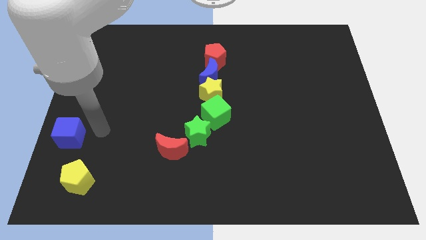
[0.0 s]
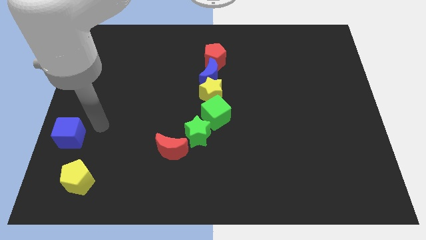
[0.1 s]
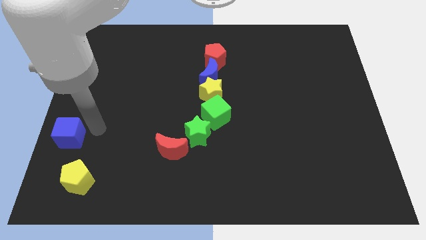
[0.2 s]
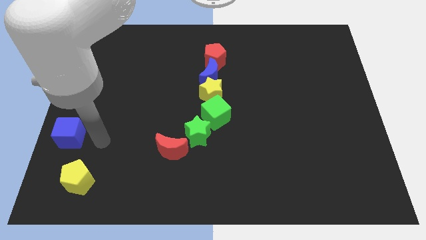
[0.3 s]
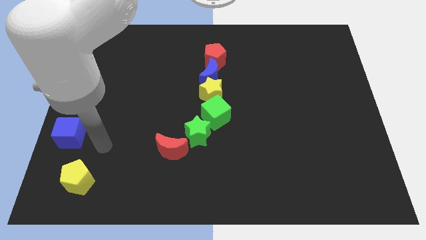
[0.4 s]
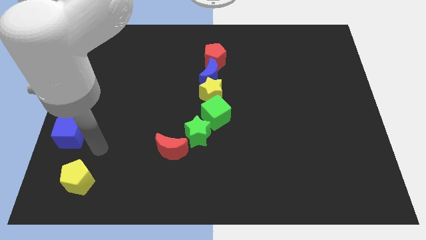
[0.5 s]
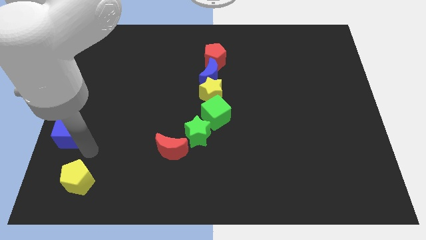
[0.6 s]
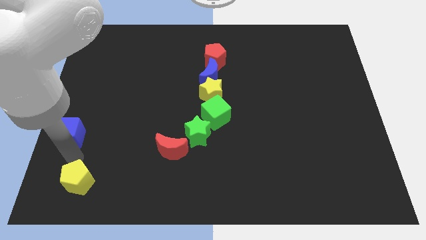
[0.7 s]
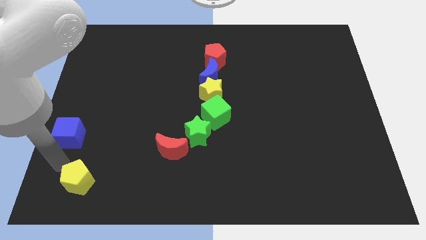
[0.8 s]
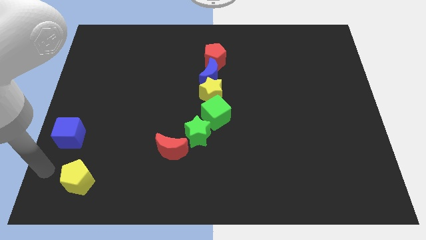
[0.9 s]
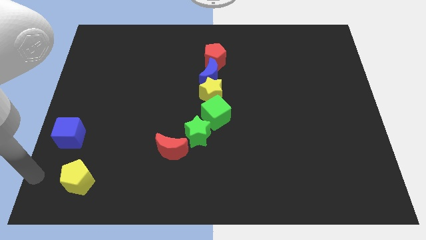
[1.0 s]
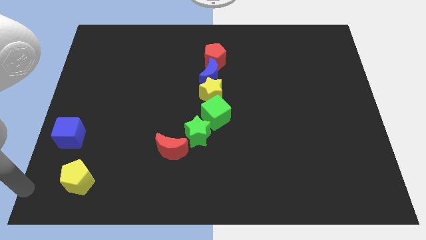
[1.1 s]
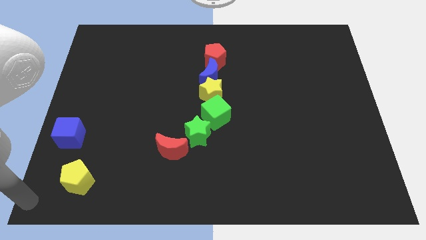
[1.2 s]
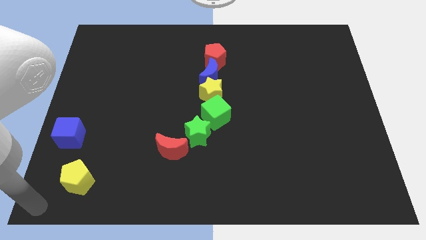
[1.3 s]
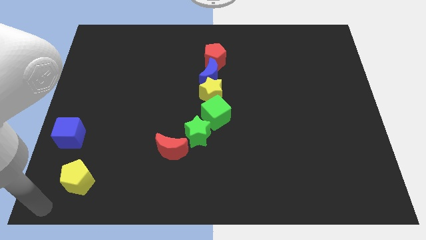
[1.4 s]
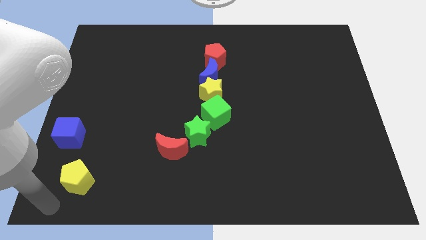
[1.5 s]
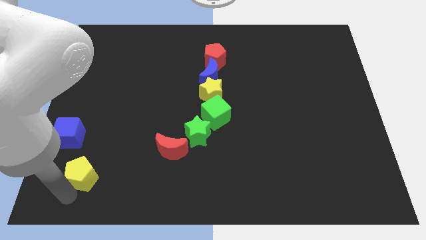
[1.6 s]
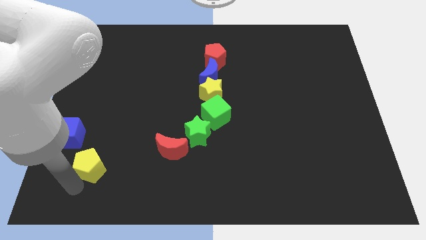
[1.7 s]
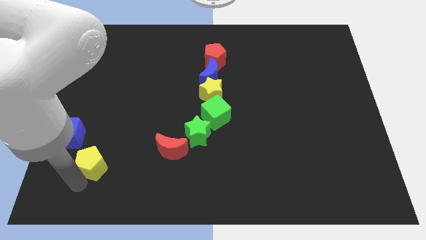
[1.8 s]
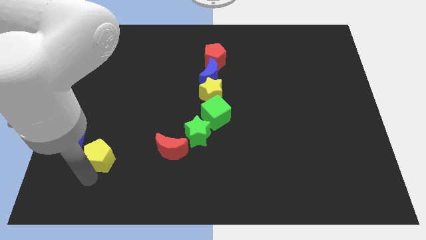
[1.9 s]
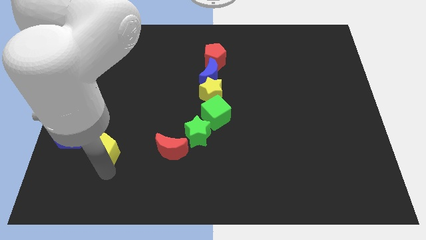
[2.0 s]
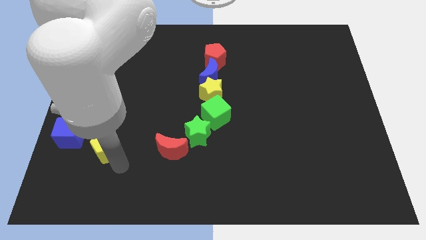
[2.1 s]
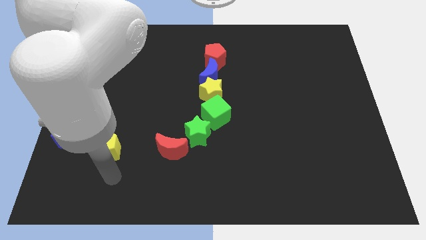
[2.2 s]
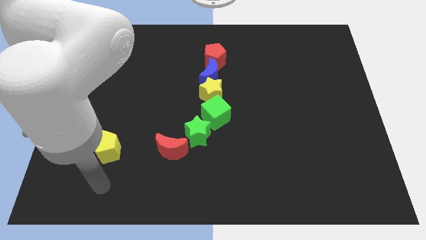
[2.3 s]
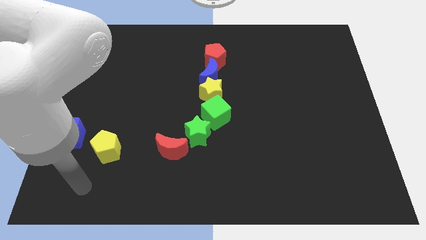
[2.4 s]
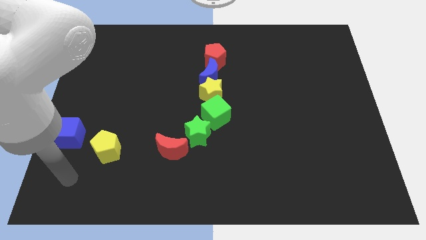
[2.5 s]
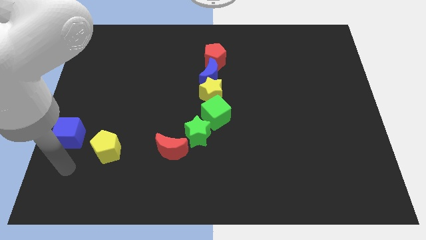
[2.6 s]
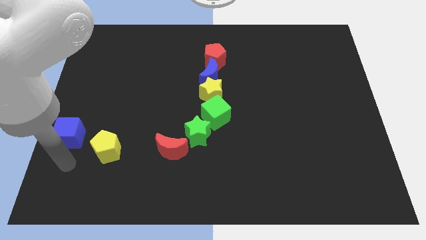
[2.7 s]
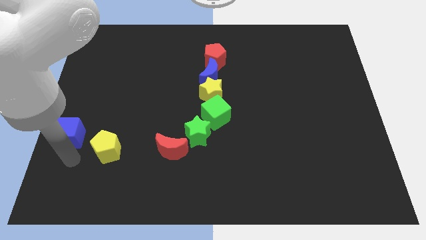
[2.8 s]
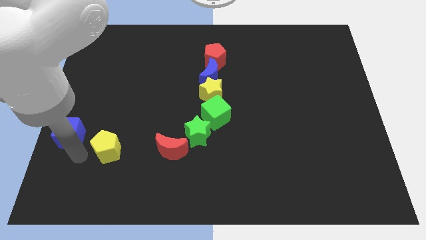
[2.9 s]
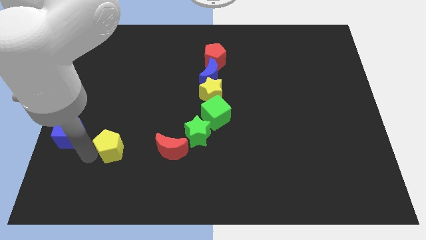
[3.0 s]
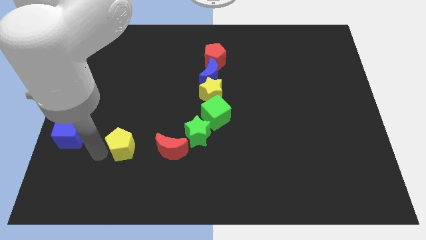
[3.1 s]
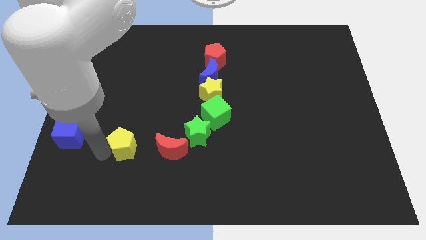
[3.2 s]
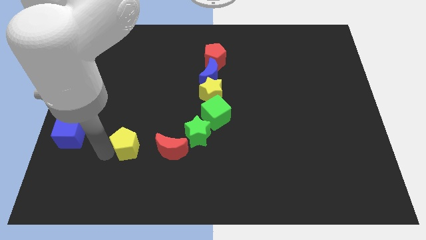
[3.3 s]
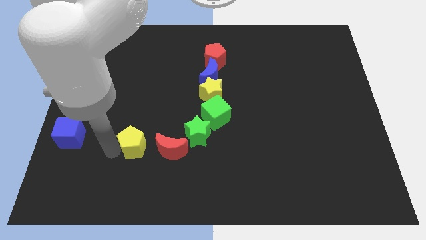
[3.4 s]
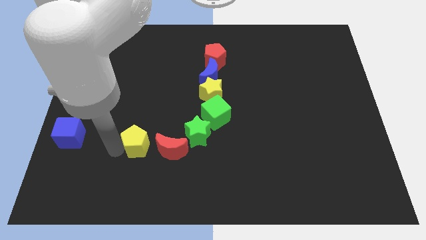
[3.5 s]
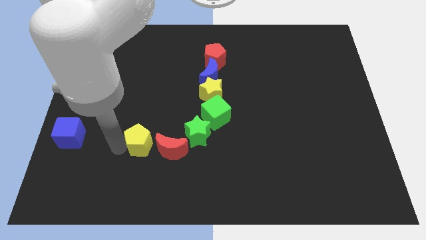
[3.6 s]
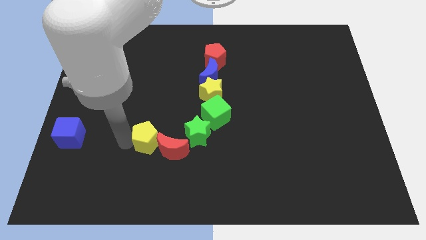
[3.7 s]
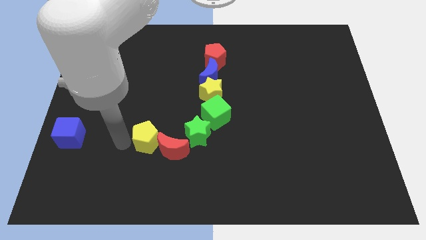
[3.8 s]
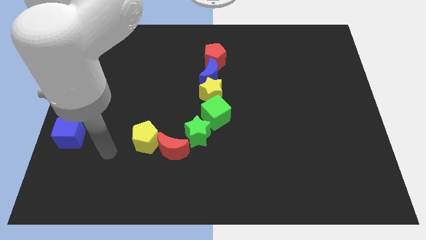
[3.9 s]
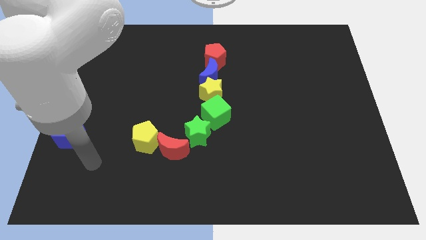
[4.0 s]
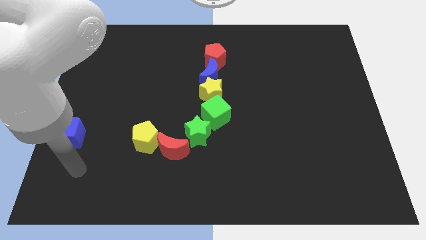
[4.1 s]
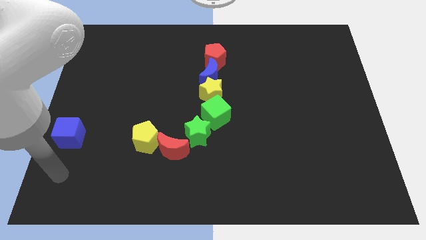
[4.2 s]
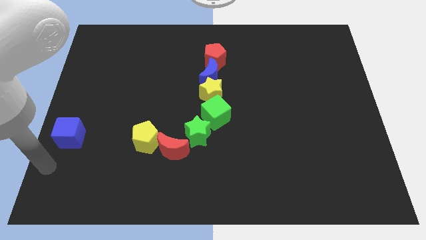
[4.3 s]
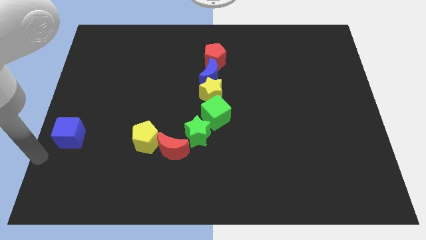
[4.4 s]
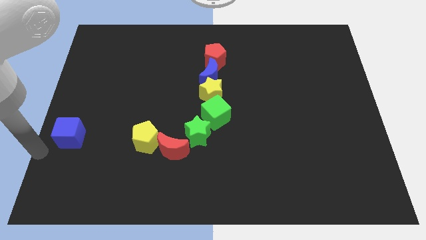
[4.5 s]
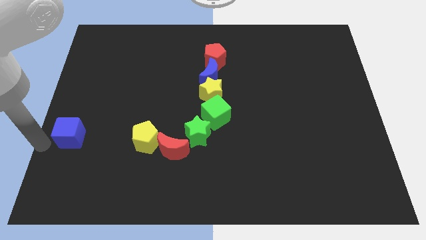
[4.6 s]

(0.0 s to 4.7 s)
move yellow pentagon close to red moon

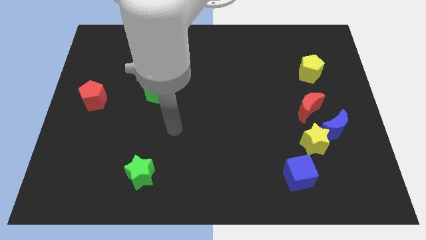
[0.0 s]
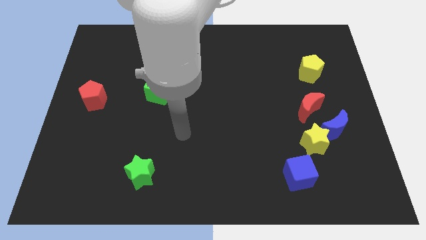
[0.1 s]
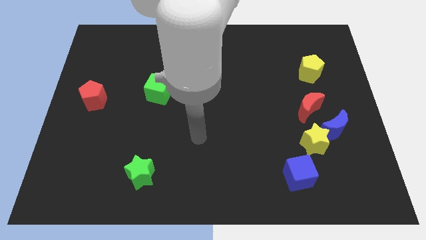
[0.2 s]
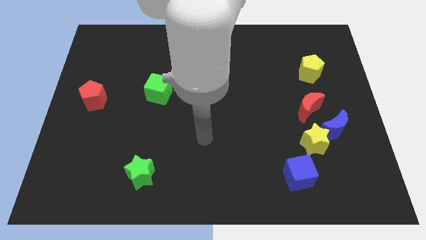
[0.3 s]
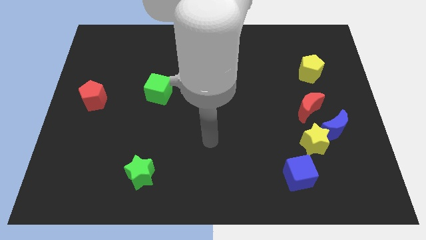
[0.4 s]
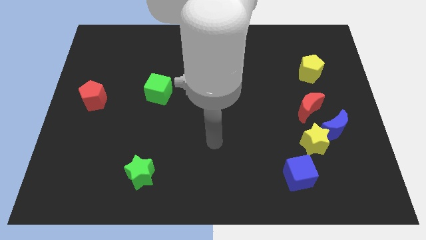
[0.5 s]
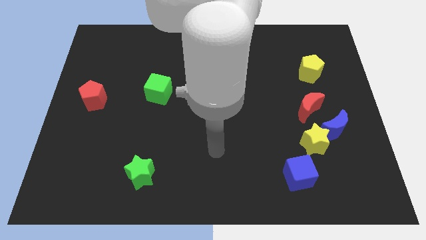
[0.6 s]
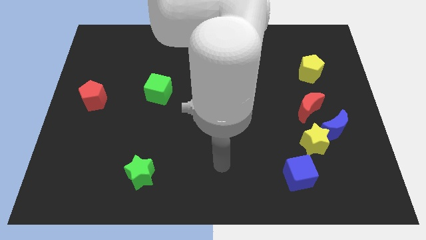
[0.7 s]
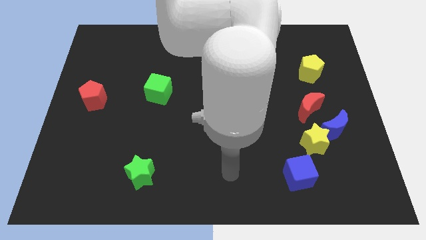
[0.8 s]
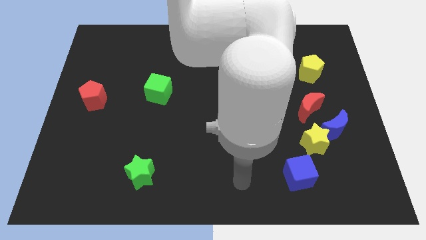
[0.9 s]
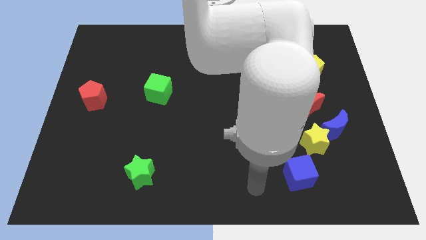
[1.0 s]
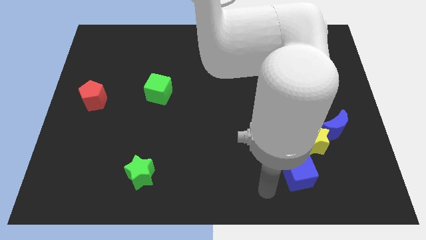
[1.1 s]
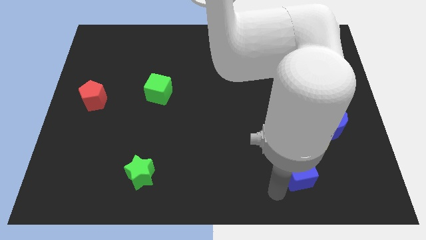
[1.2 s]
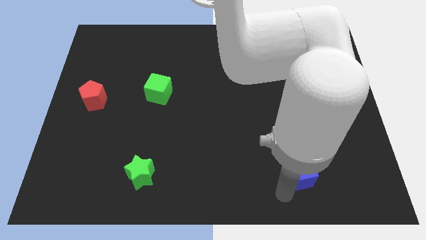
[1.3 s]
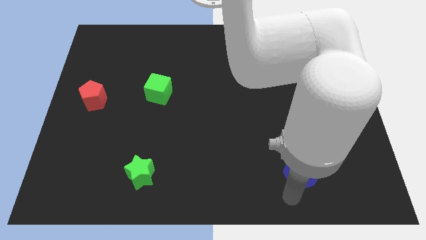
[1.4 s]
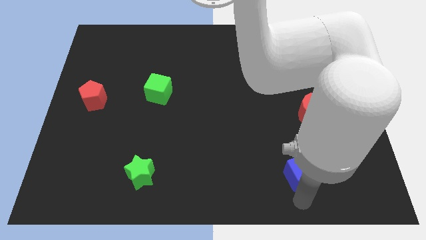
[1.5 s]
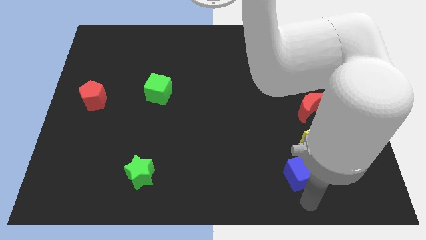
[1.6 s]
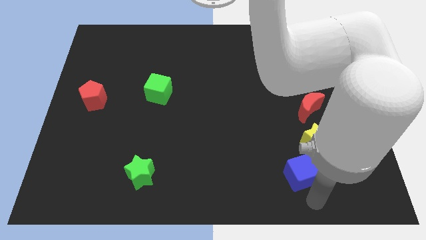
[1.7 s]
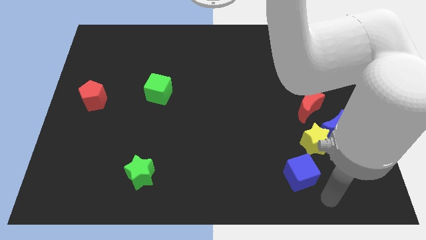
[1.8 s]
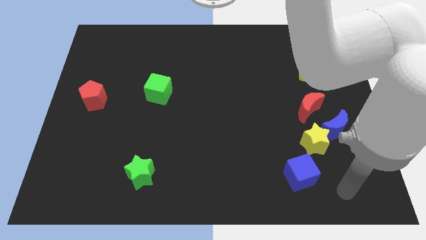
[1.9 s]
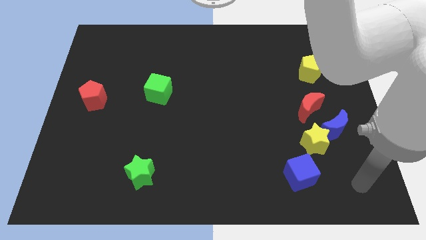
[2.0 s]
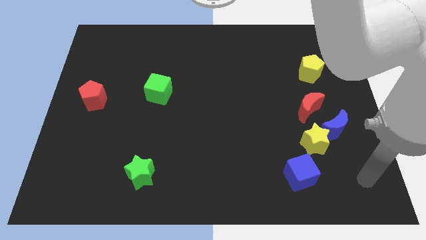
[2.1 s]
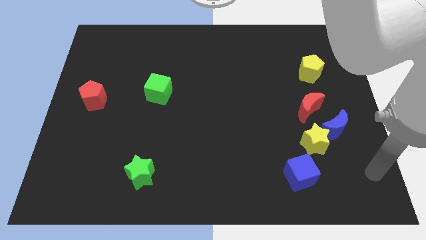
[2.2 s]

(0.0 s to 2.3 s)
go and place your arm at the right of the blue cube

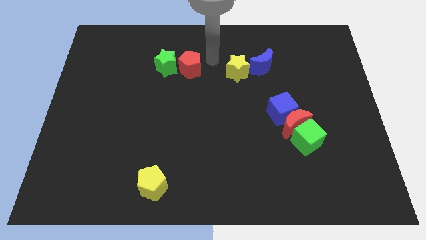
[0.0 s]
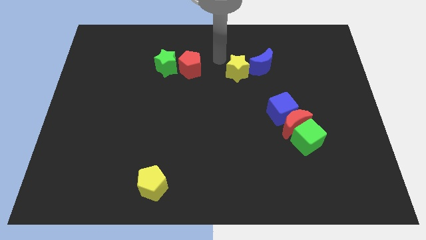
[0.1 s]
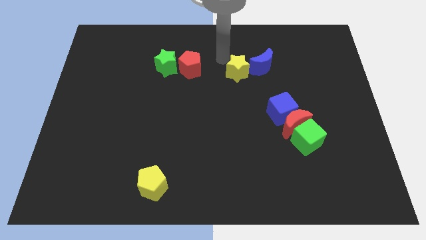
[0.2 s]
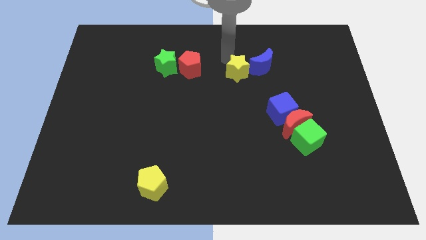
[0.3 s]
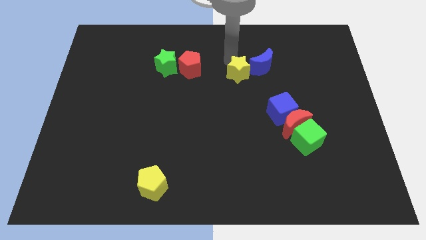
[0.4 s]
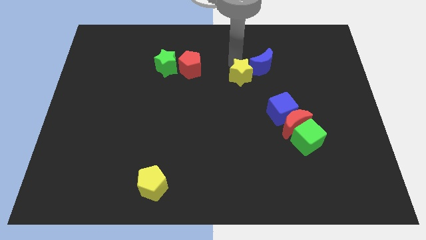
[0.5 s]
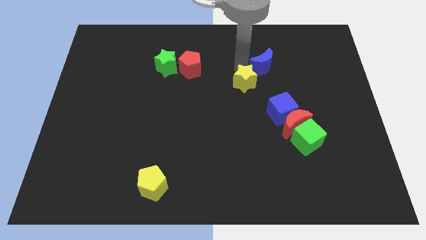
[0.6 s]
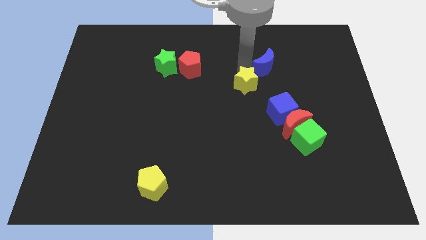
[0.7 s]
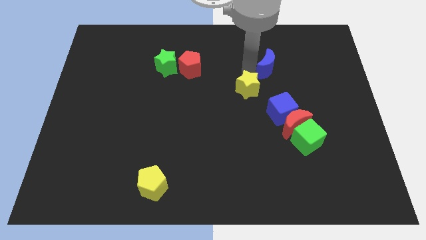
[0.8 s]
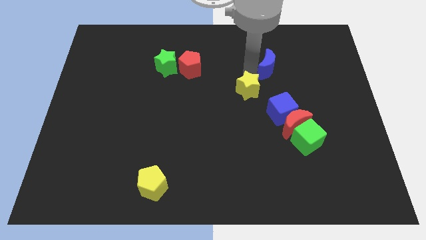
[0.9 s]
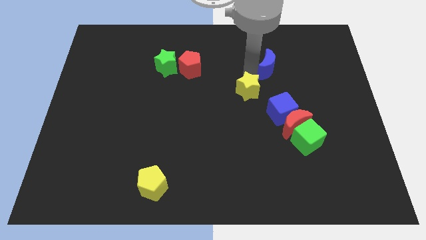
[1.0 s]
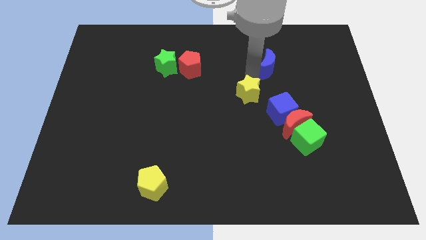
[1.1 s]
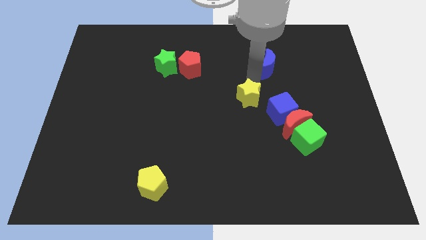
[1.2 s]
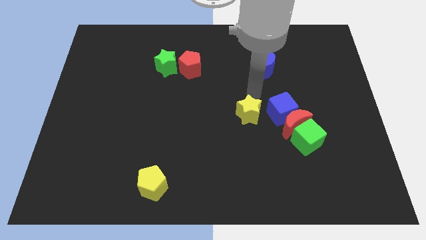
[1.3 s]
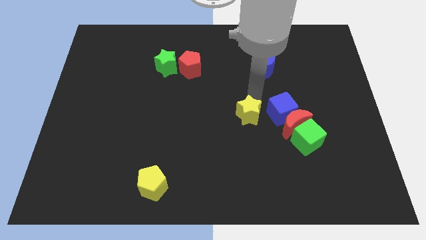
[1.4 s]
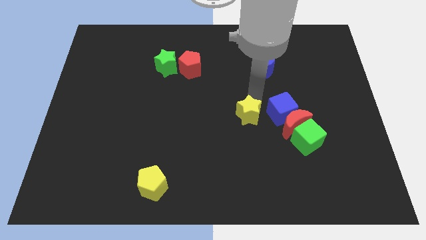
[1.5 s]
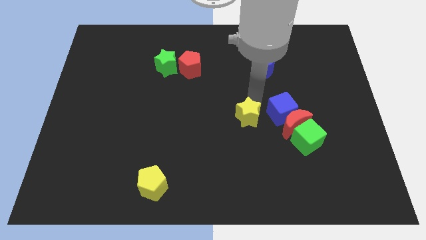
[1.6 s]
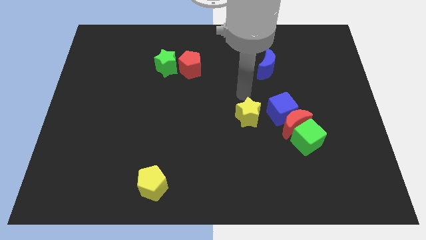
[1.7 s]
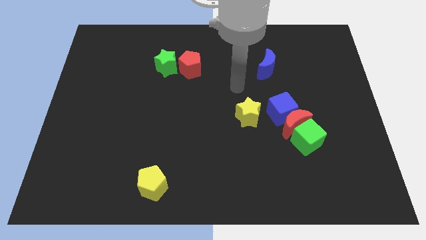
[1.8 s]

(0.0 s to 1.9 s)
push the yellow star to the left of the blue cube
